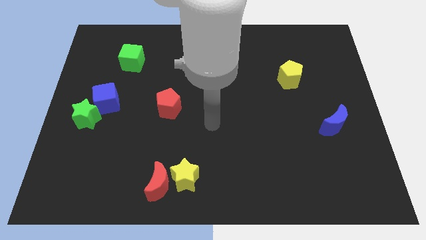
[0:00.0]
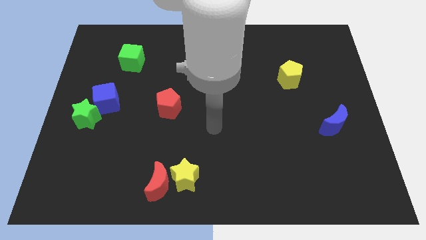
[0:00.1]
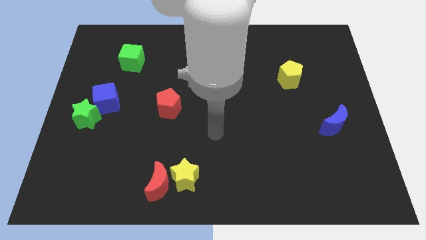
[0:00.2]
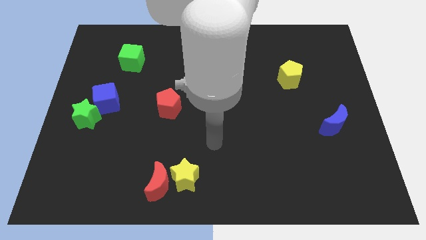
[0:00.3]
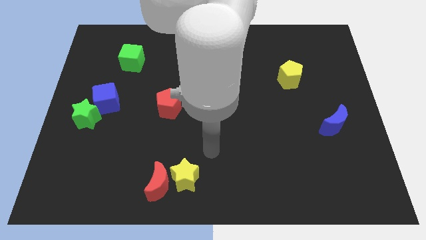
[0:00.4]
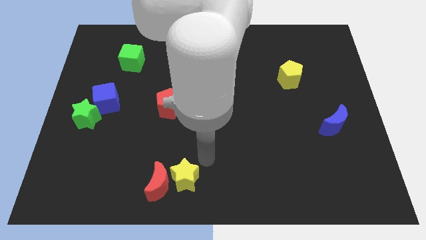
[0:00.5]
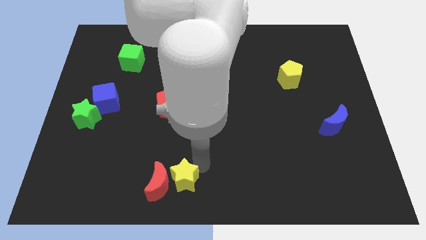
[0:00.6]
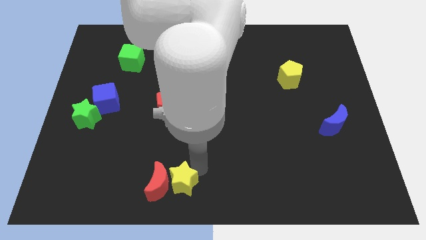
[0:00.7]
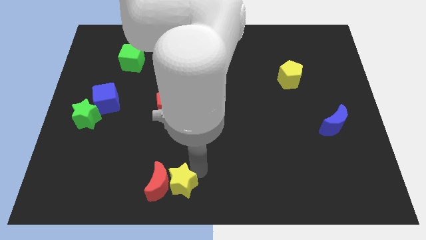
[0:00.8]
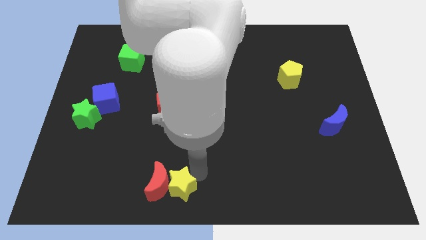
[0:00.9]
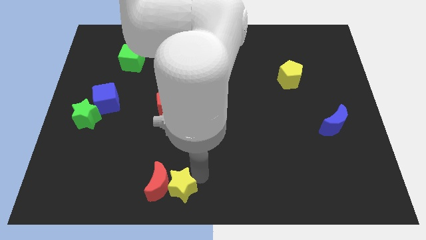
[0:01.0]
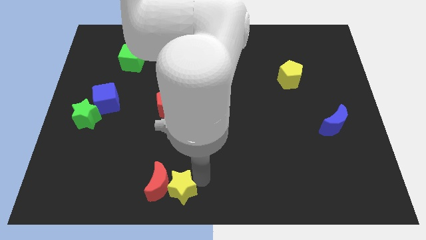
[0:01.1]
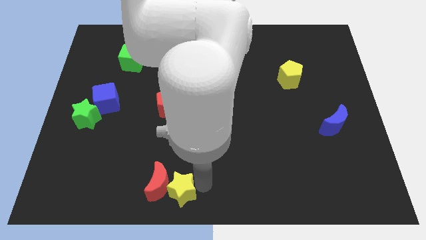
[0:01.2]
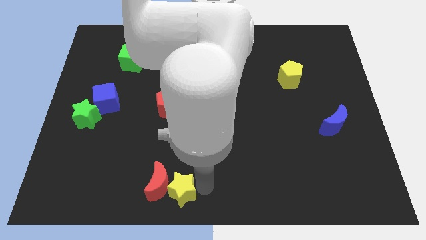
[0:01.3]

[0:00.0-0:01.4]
move the yellow star downwards

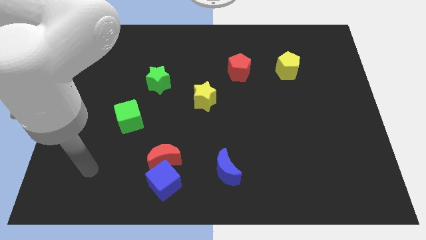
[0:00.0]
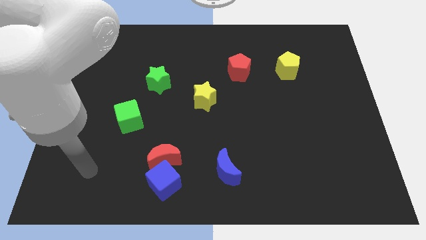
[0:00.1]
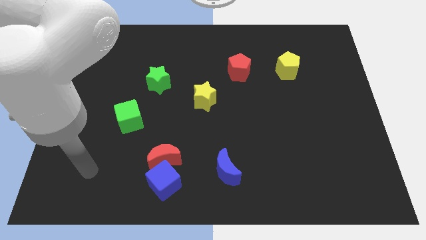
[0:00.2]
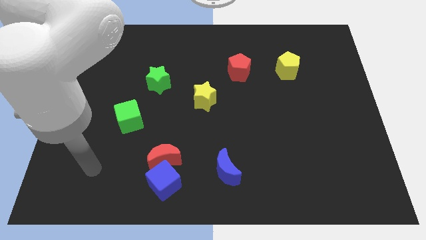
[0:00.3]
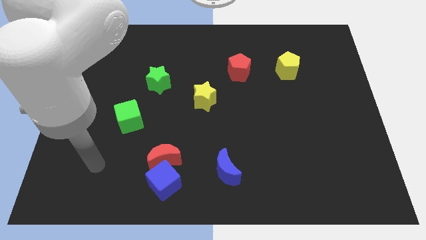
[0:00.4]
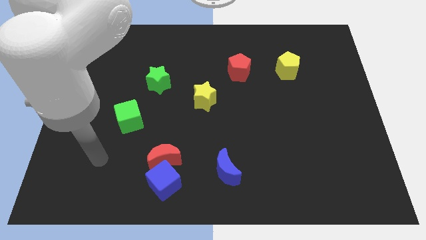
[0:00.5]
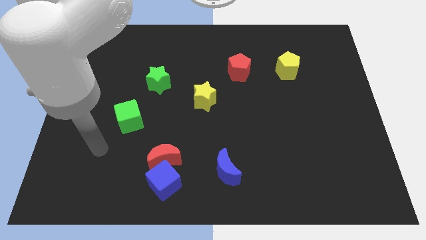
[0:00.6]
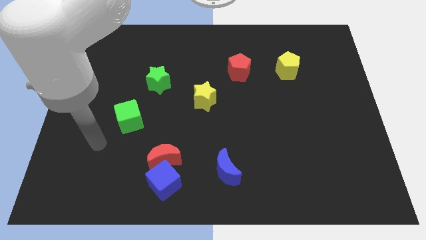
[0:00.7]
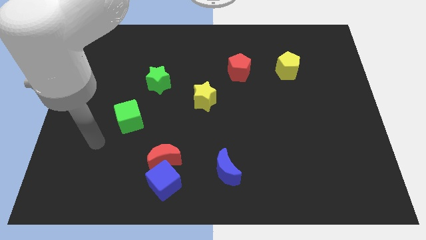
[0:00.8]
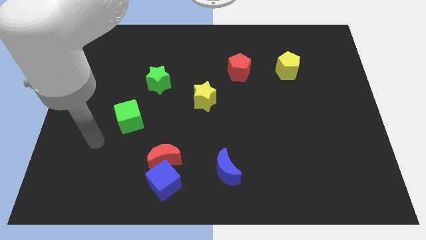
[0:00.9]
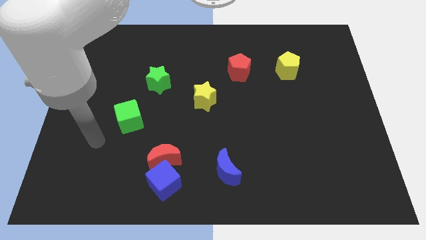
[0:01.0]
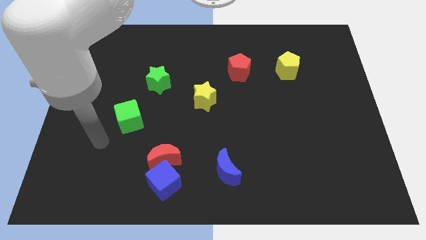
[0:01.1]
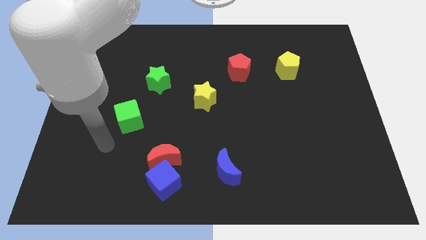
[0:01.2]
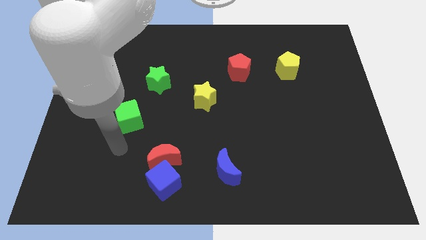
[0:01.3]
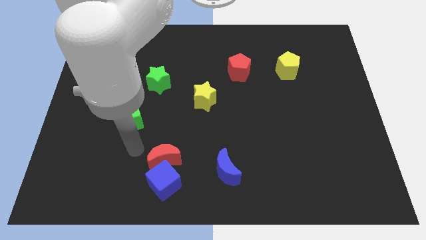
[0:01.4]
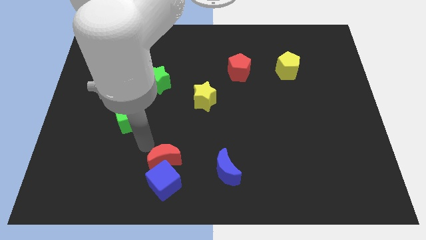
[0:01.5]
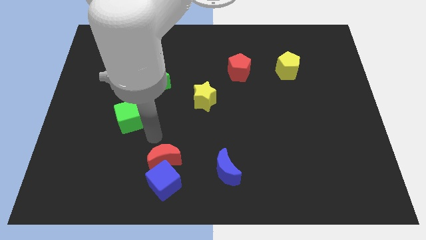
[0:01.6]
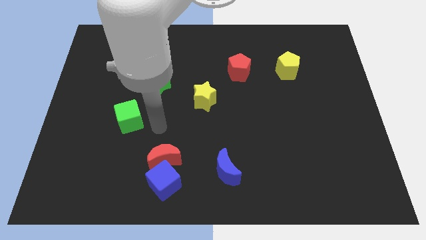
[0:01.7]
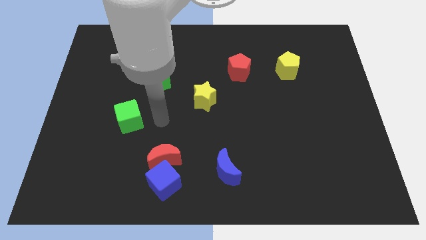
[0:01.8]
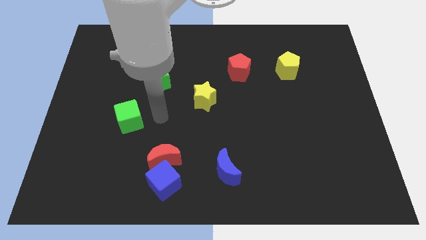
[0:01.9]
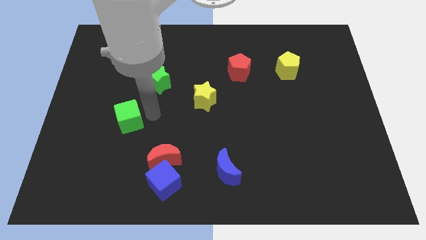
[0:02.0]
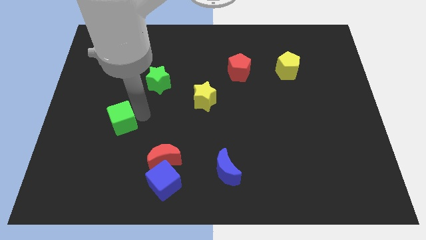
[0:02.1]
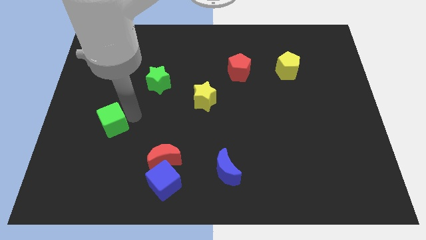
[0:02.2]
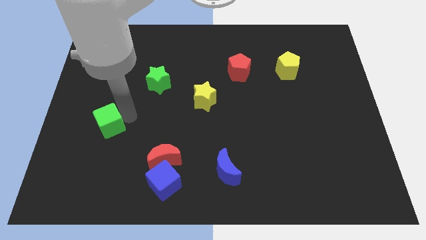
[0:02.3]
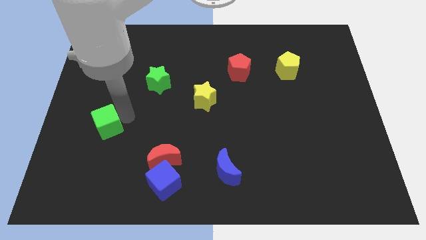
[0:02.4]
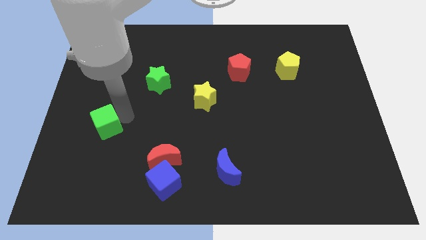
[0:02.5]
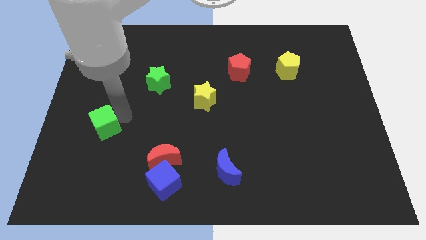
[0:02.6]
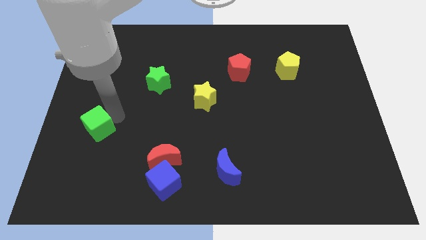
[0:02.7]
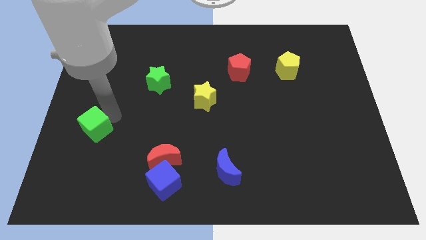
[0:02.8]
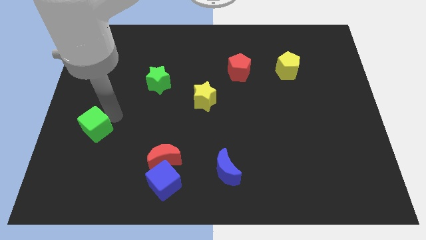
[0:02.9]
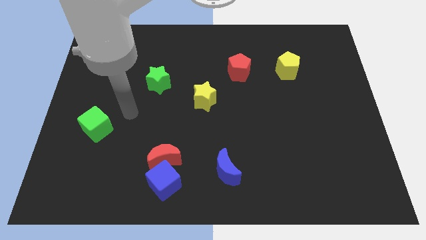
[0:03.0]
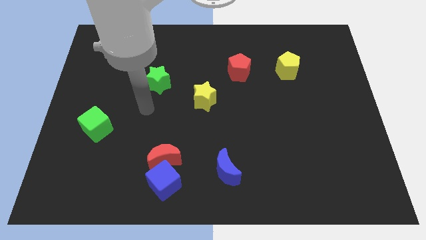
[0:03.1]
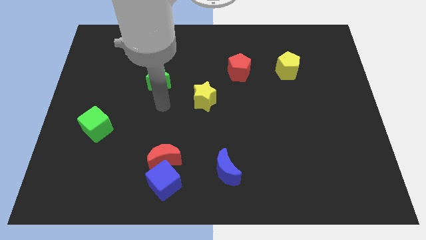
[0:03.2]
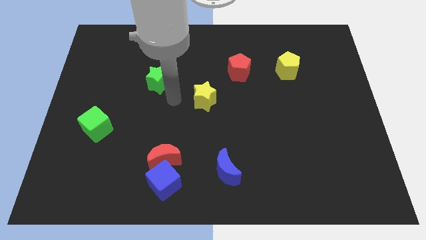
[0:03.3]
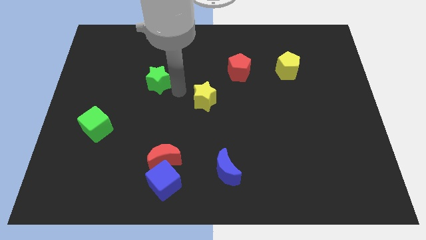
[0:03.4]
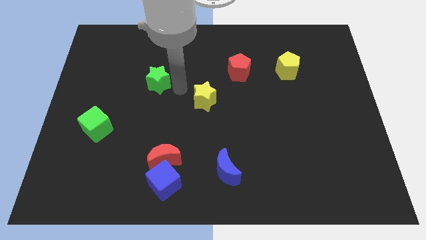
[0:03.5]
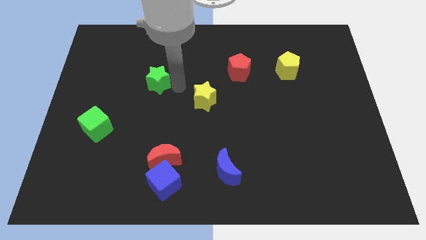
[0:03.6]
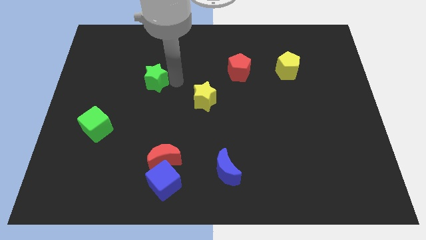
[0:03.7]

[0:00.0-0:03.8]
push the green cube towards the left side of the board

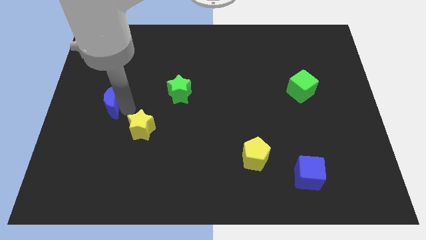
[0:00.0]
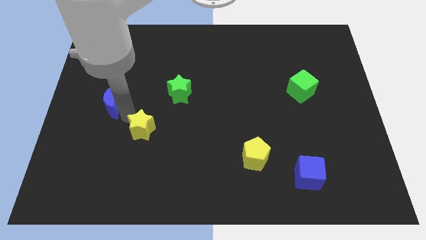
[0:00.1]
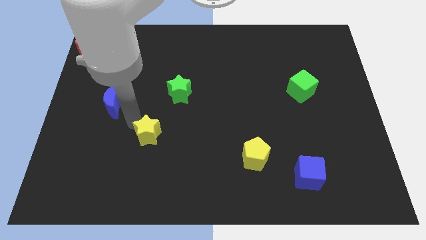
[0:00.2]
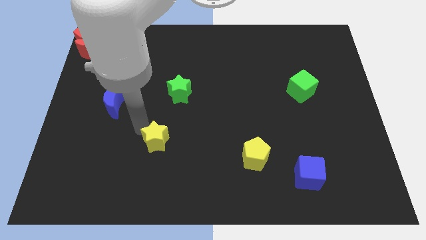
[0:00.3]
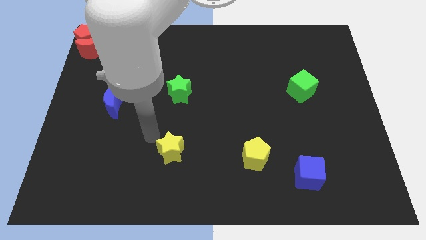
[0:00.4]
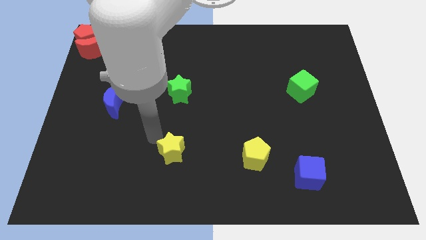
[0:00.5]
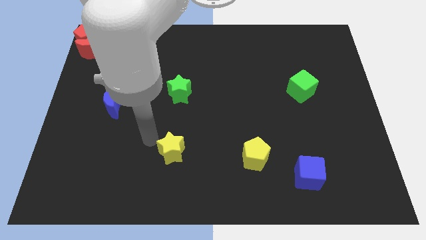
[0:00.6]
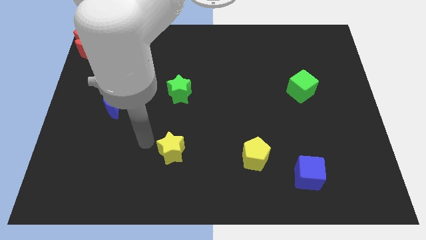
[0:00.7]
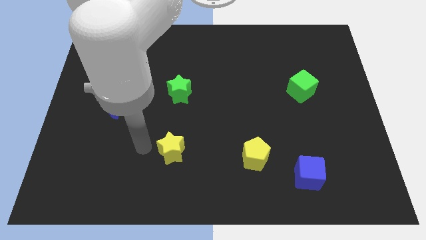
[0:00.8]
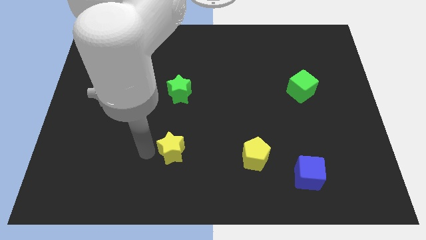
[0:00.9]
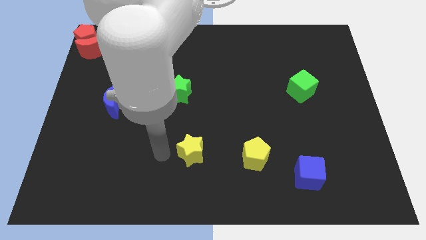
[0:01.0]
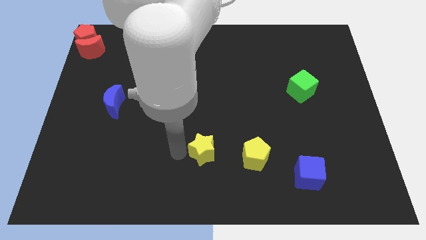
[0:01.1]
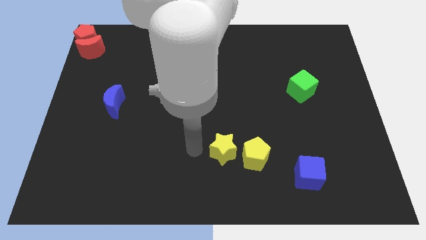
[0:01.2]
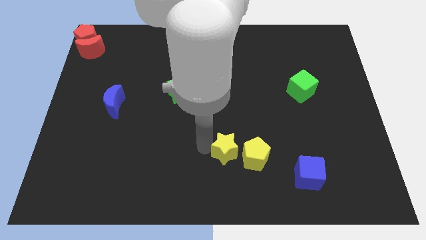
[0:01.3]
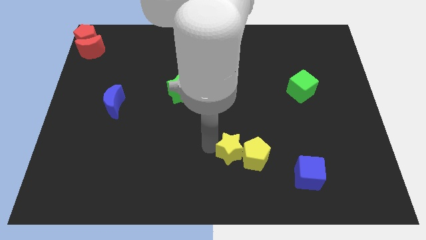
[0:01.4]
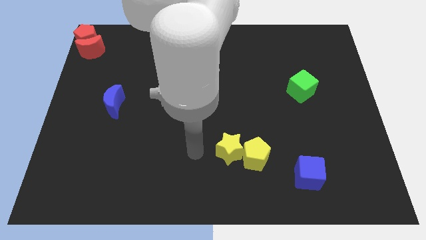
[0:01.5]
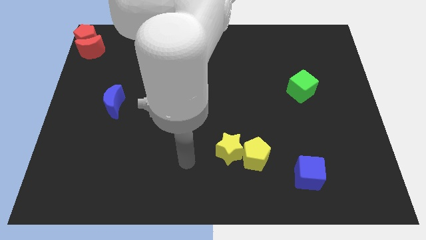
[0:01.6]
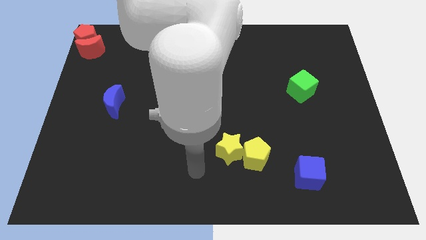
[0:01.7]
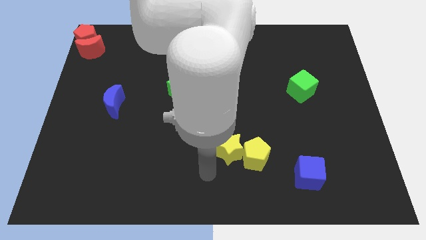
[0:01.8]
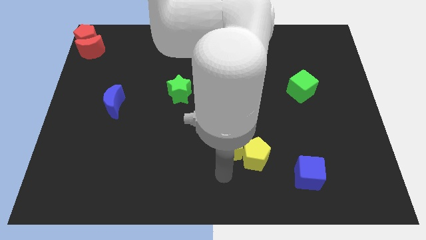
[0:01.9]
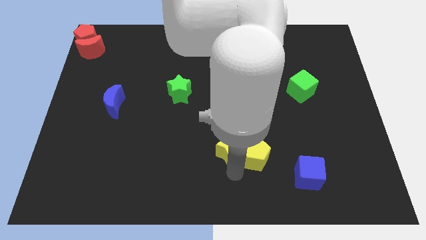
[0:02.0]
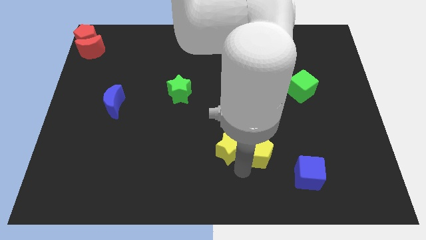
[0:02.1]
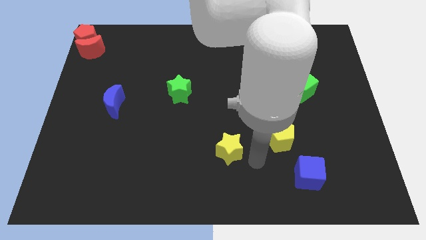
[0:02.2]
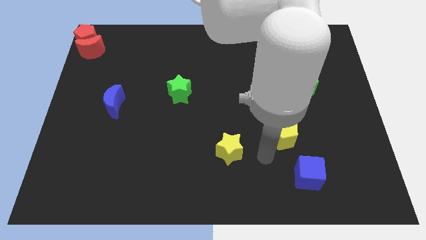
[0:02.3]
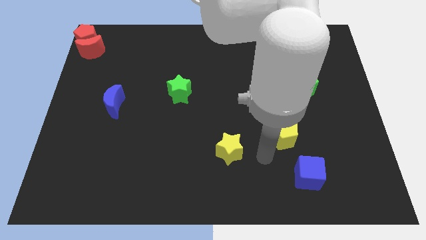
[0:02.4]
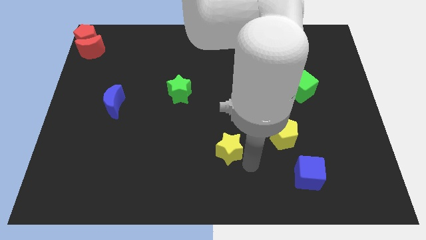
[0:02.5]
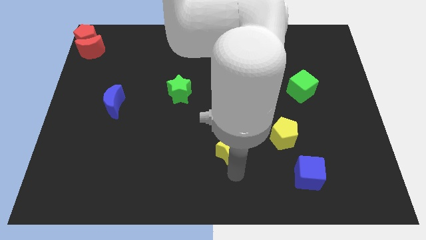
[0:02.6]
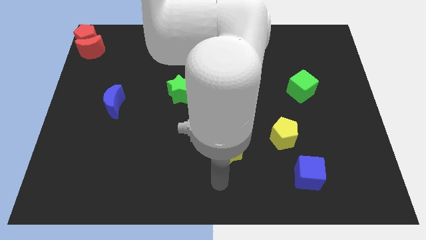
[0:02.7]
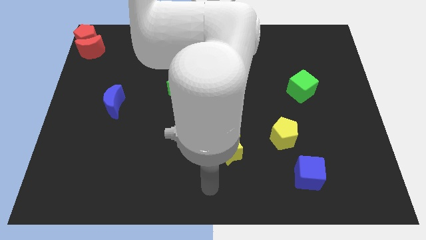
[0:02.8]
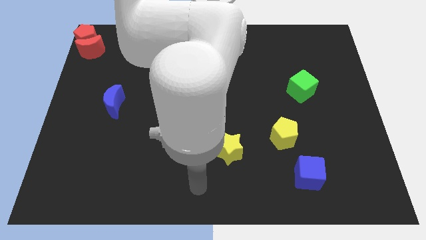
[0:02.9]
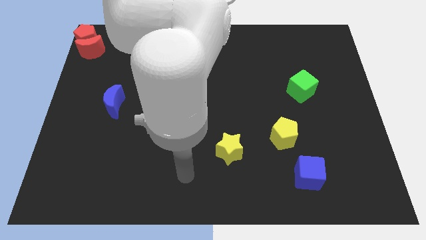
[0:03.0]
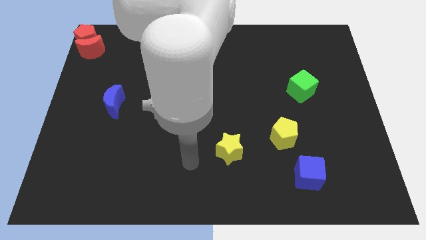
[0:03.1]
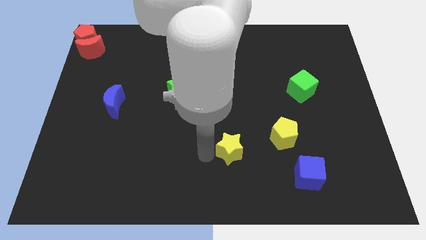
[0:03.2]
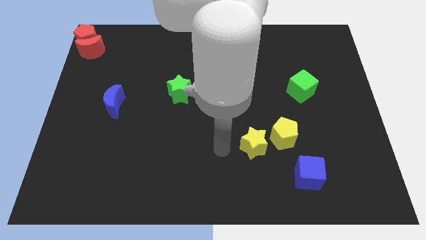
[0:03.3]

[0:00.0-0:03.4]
move the yellow star into the yellow pentagon

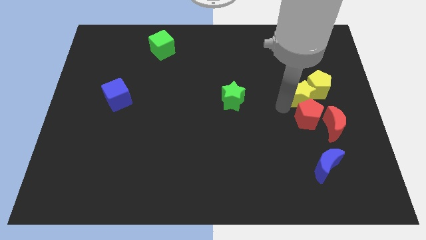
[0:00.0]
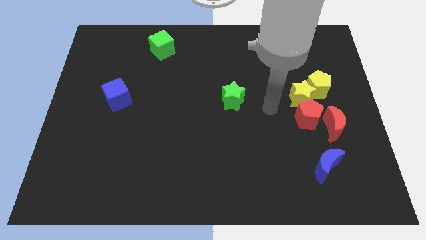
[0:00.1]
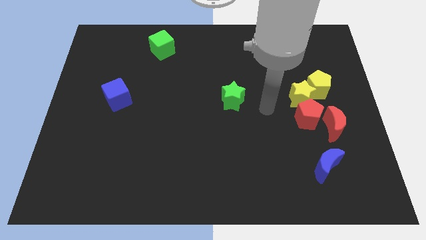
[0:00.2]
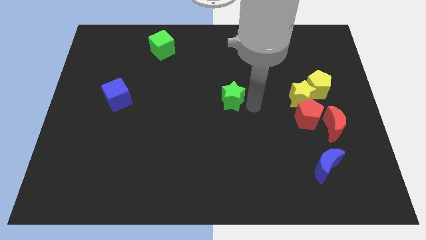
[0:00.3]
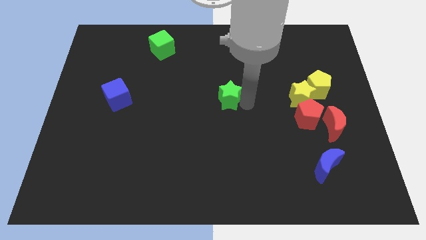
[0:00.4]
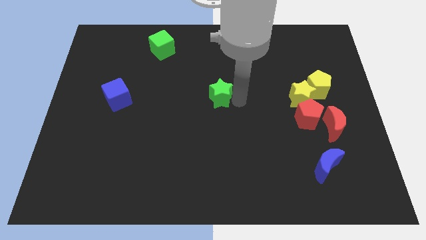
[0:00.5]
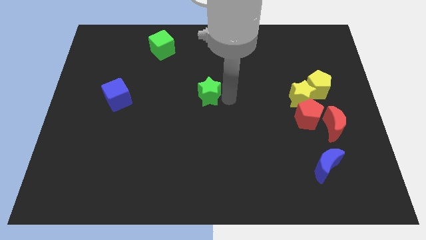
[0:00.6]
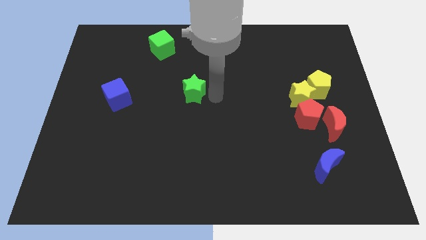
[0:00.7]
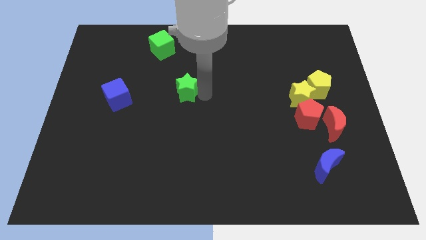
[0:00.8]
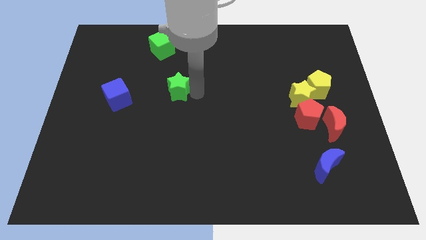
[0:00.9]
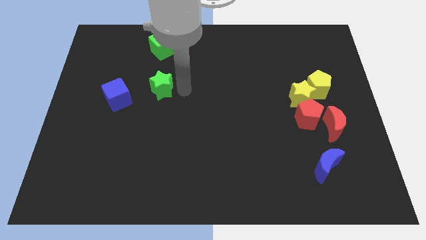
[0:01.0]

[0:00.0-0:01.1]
push the green star down to the green cube
